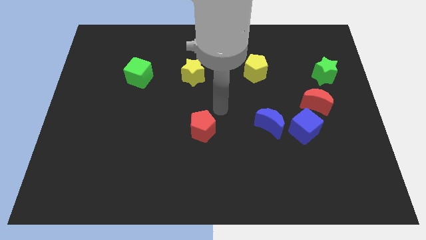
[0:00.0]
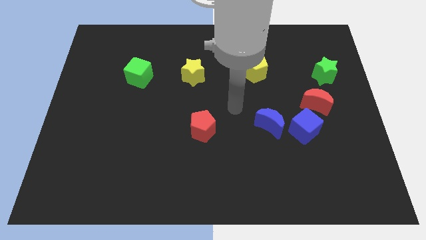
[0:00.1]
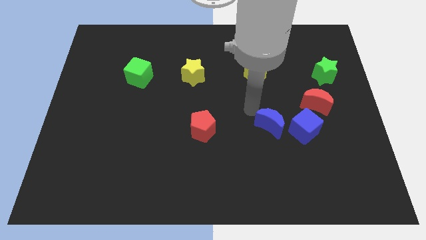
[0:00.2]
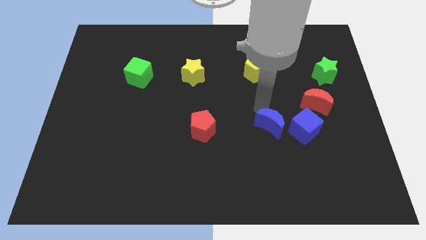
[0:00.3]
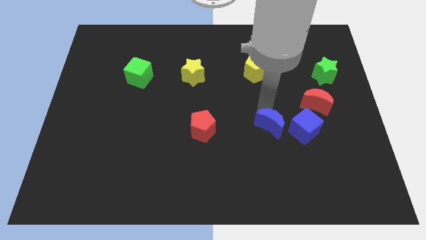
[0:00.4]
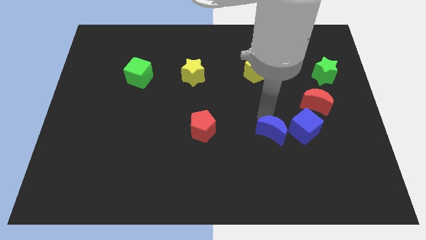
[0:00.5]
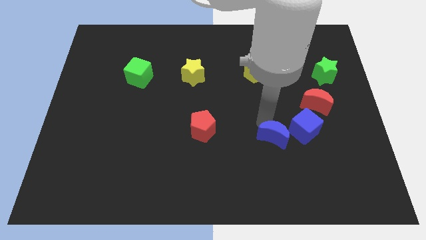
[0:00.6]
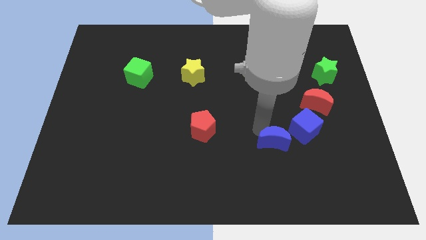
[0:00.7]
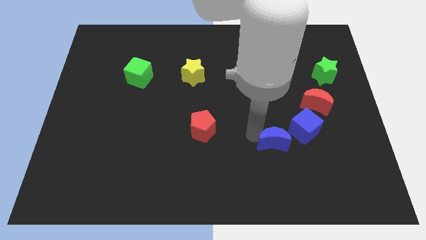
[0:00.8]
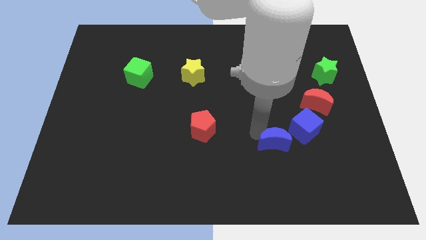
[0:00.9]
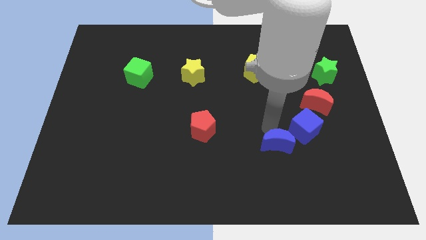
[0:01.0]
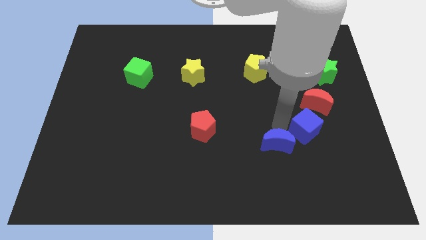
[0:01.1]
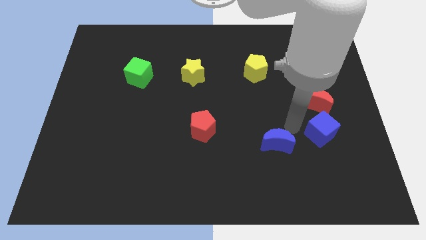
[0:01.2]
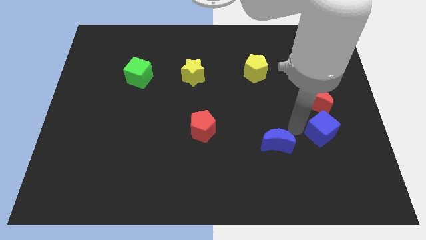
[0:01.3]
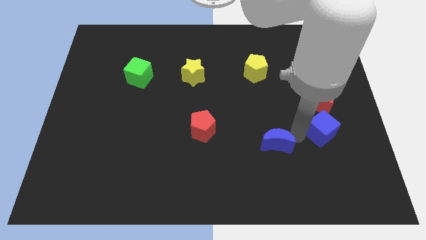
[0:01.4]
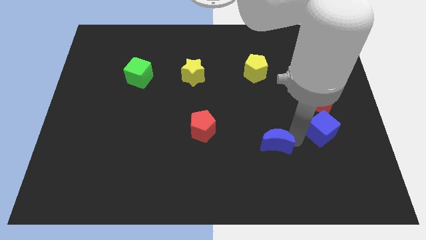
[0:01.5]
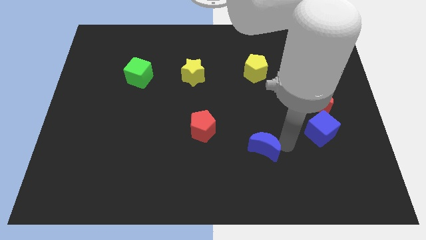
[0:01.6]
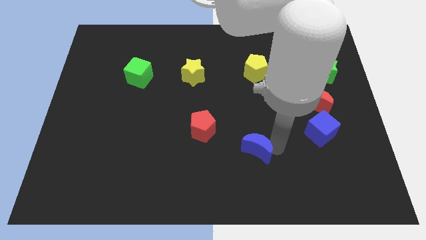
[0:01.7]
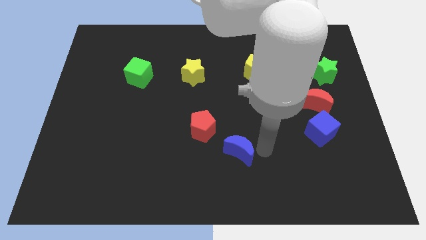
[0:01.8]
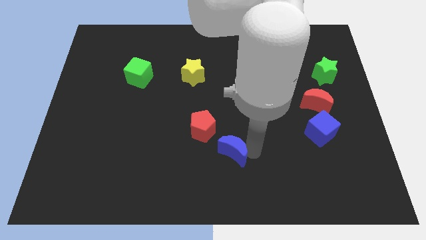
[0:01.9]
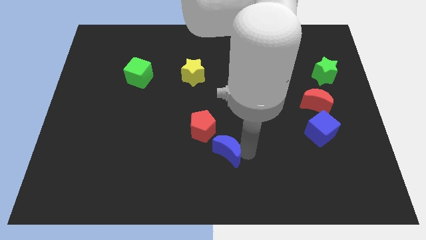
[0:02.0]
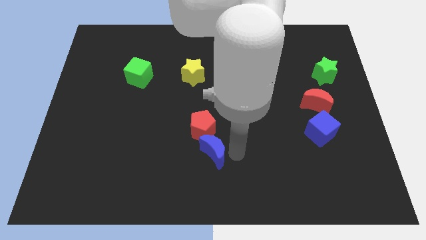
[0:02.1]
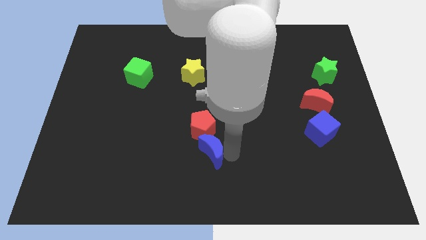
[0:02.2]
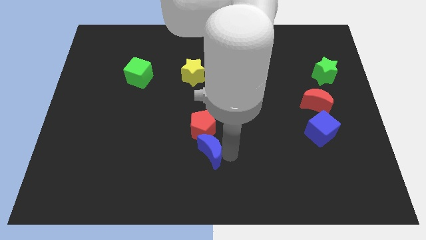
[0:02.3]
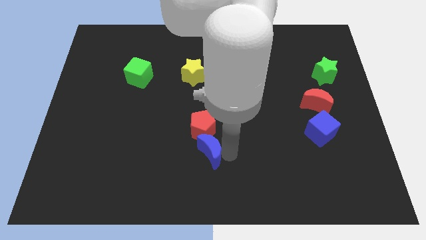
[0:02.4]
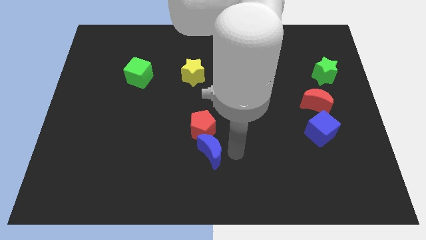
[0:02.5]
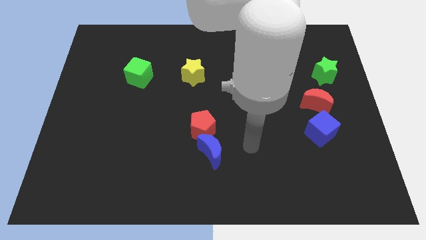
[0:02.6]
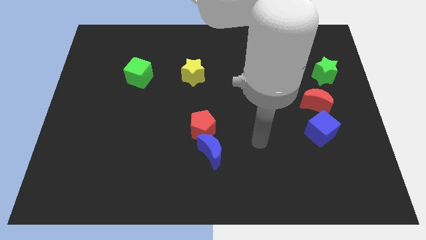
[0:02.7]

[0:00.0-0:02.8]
push the blue moon to the bottom side of the red pentagon

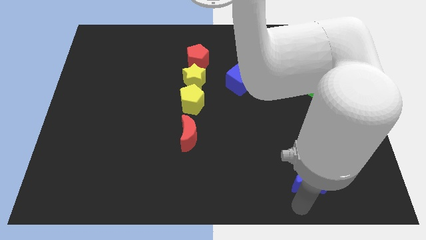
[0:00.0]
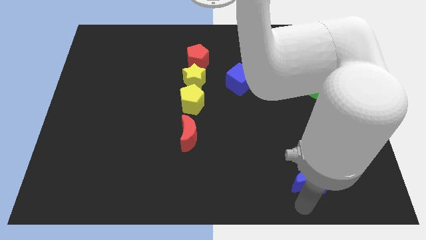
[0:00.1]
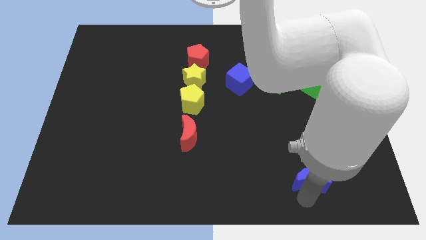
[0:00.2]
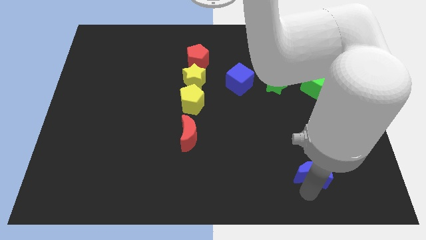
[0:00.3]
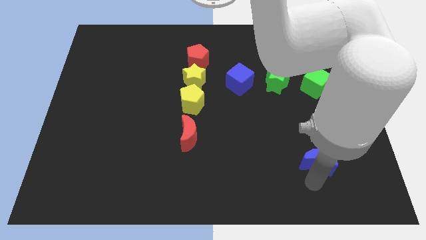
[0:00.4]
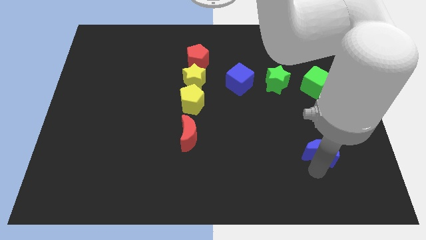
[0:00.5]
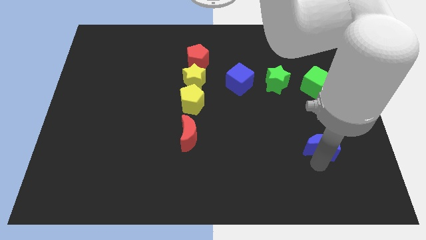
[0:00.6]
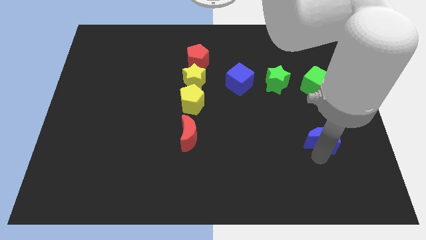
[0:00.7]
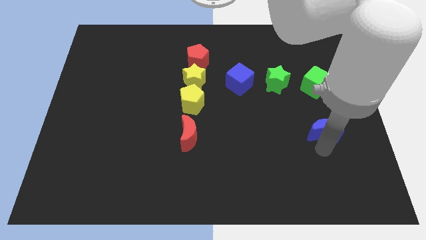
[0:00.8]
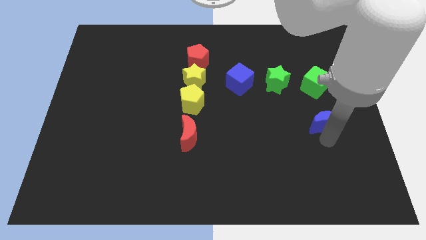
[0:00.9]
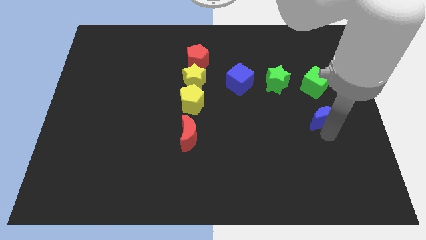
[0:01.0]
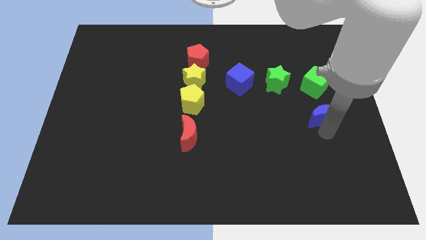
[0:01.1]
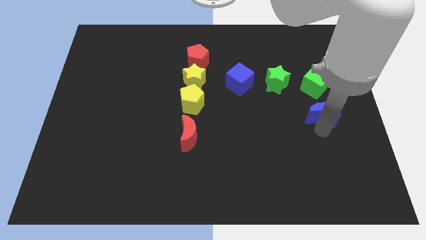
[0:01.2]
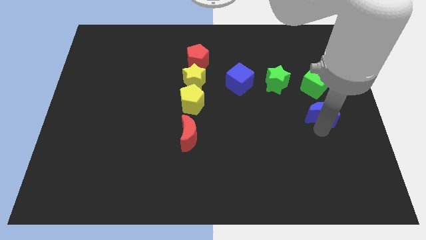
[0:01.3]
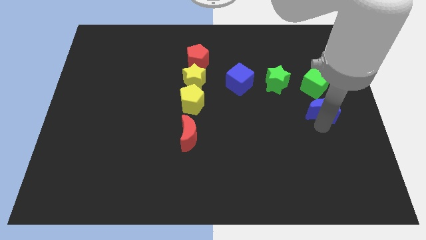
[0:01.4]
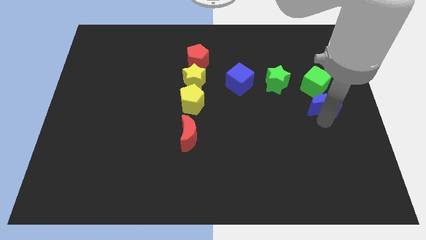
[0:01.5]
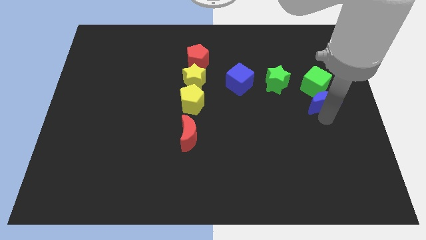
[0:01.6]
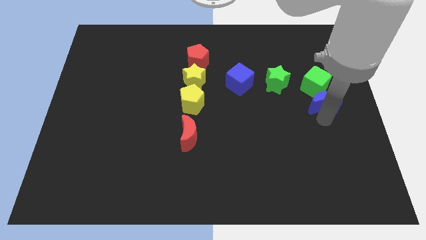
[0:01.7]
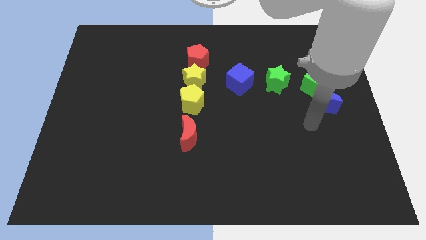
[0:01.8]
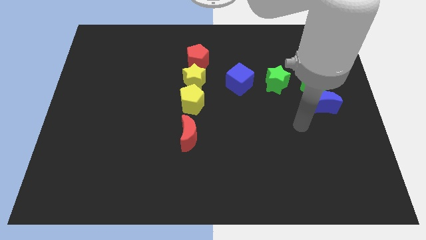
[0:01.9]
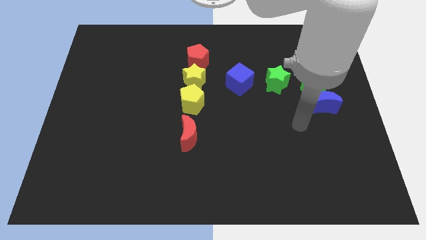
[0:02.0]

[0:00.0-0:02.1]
push the blue moon below the green cube

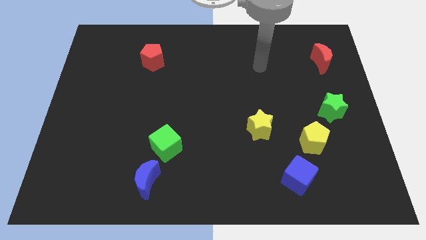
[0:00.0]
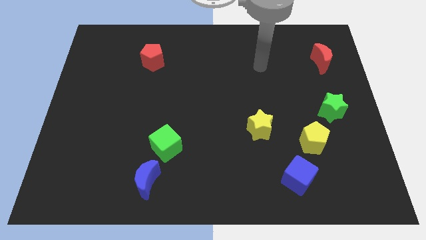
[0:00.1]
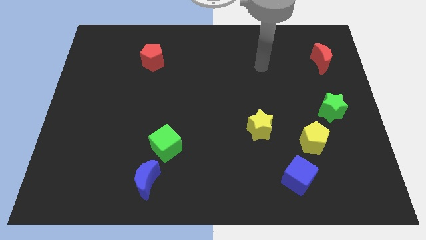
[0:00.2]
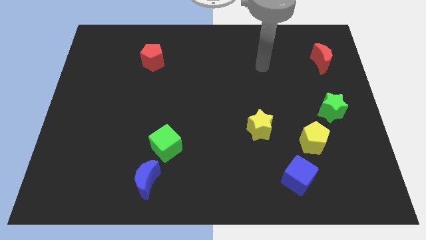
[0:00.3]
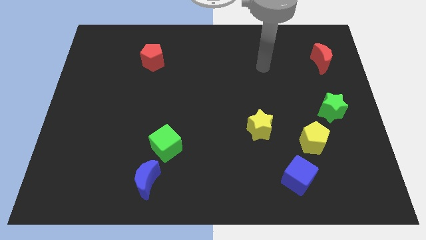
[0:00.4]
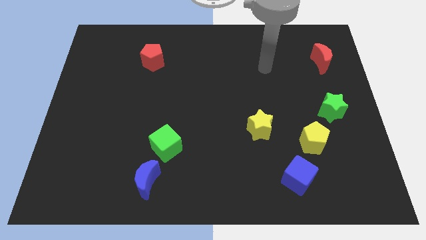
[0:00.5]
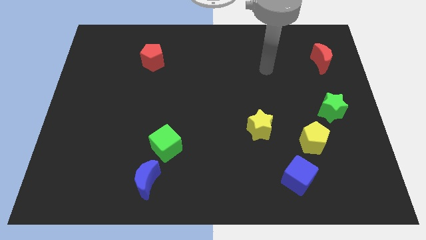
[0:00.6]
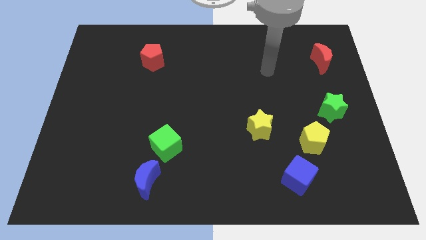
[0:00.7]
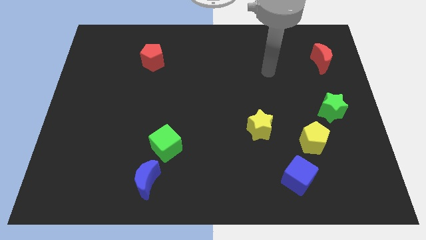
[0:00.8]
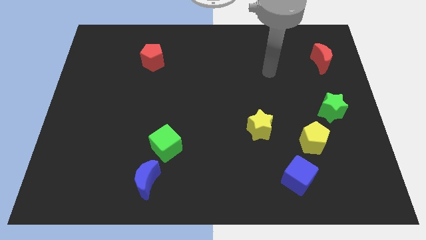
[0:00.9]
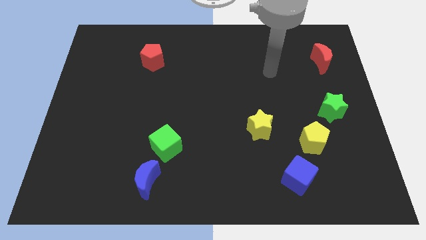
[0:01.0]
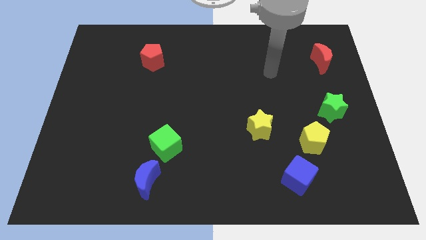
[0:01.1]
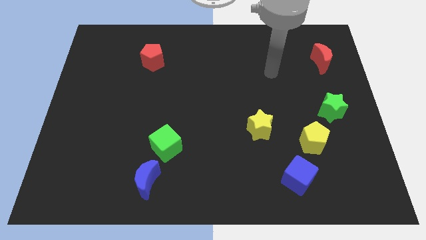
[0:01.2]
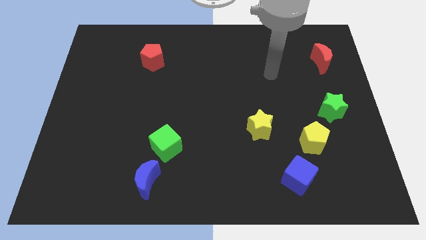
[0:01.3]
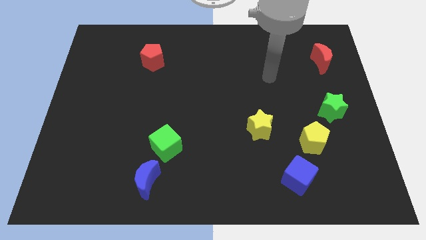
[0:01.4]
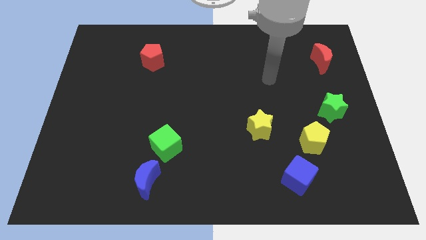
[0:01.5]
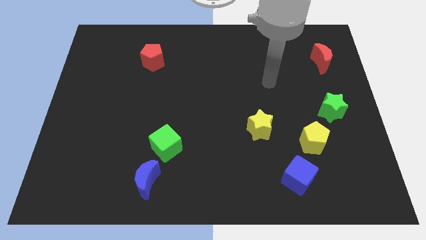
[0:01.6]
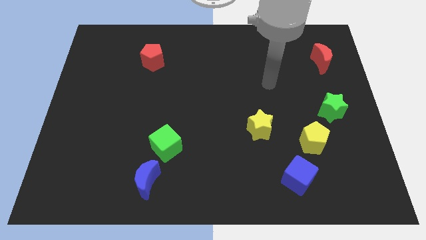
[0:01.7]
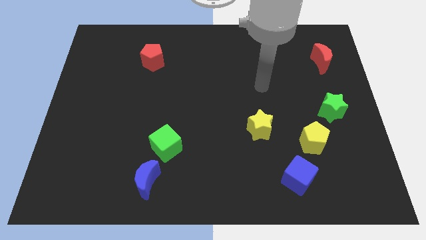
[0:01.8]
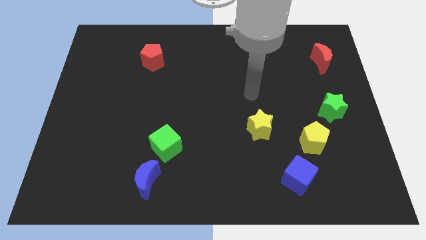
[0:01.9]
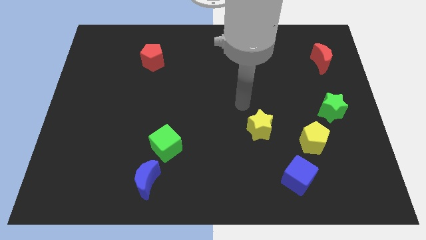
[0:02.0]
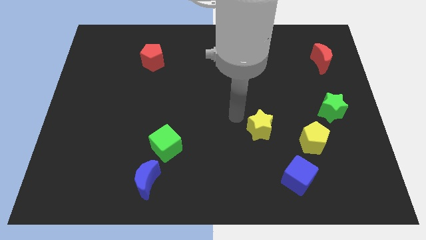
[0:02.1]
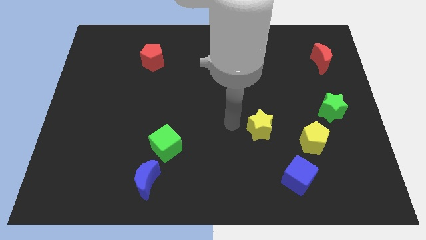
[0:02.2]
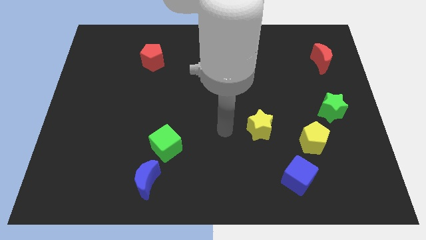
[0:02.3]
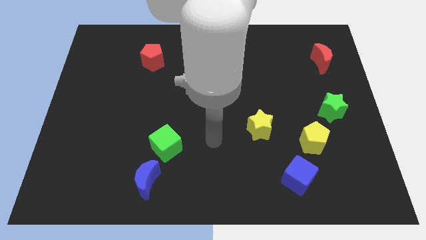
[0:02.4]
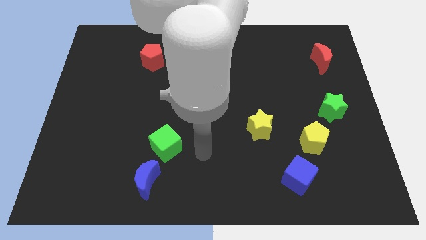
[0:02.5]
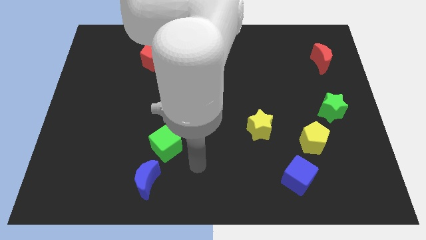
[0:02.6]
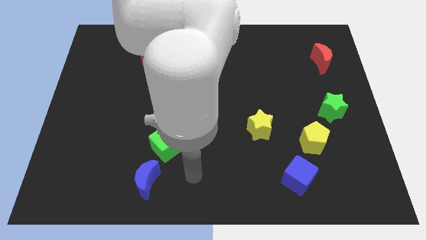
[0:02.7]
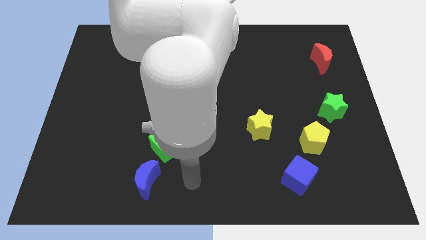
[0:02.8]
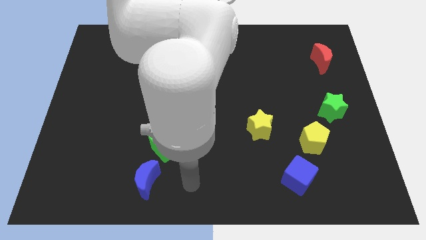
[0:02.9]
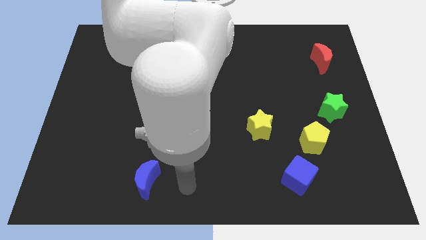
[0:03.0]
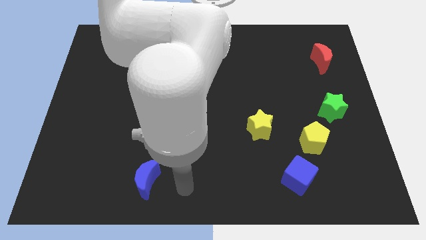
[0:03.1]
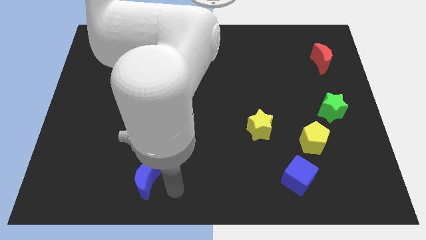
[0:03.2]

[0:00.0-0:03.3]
move the arm right side of the blue crescent

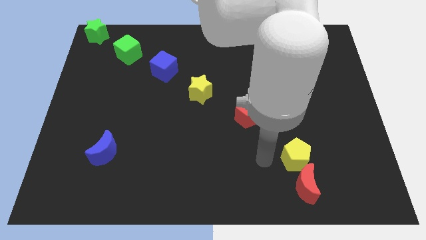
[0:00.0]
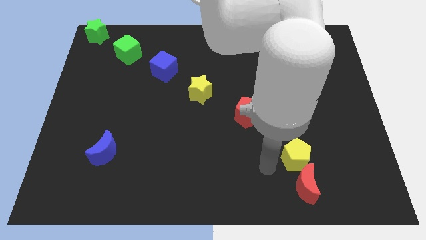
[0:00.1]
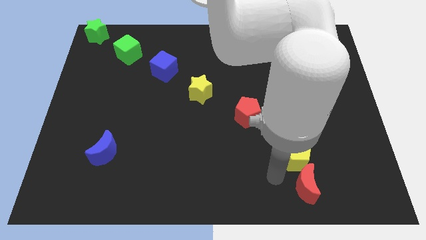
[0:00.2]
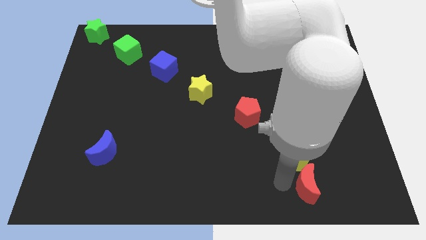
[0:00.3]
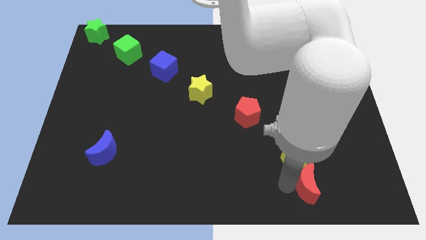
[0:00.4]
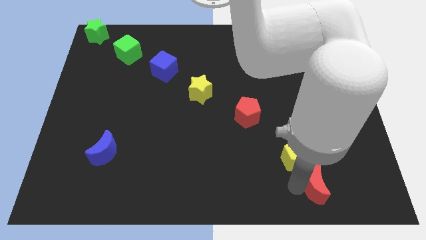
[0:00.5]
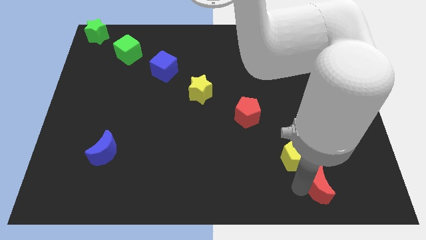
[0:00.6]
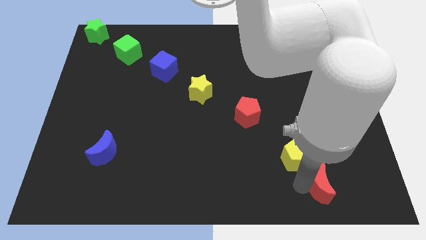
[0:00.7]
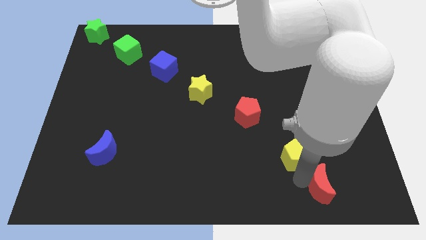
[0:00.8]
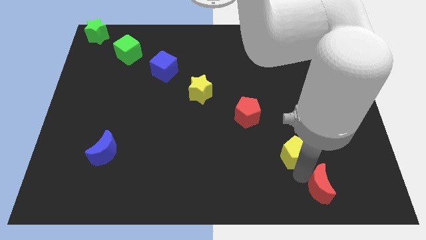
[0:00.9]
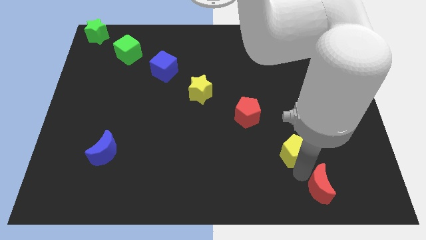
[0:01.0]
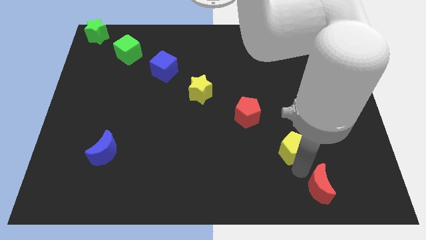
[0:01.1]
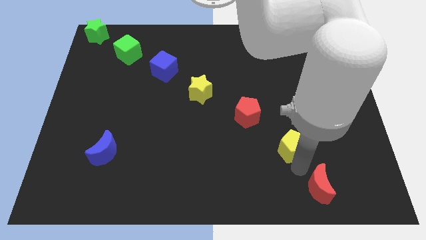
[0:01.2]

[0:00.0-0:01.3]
separate the red crescent from yellow pentagon
